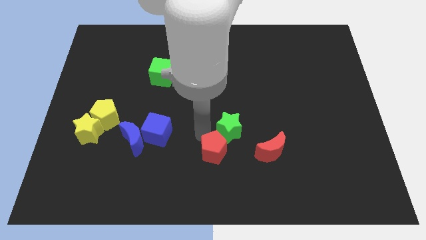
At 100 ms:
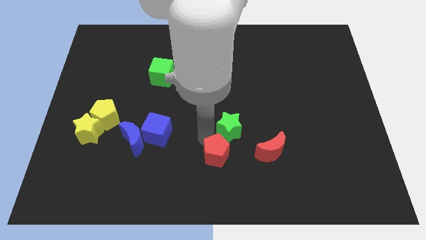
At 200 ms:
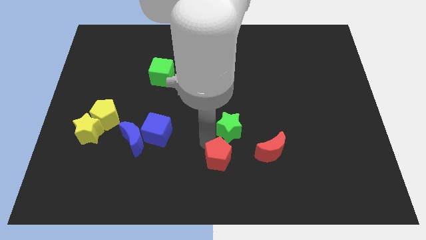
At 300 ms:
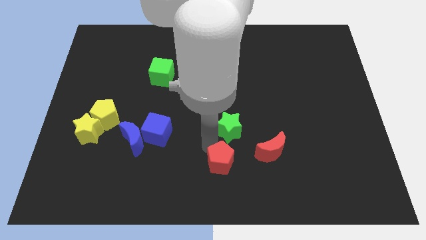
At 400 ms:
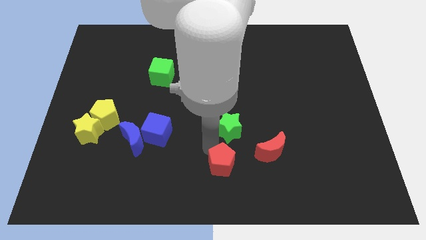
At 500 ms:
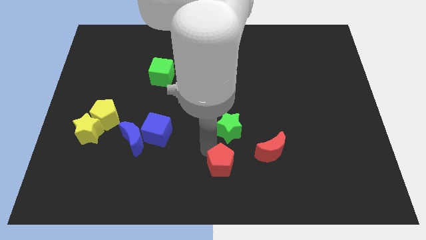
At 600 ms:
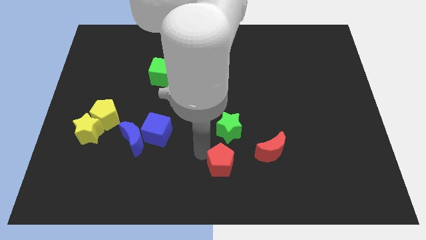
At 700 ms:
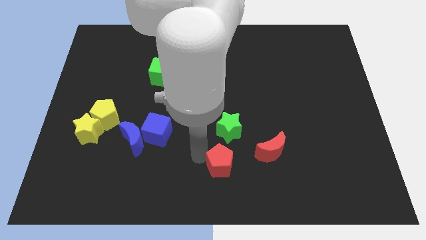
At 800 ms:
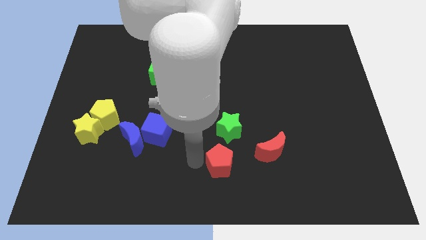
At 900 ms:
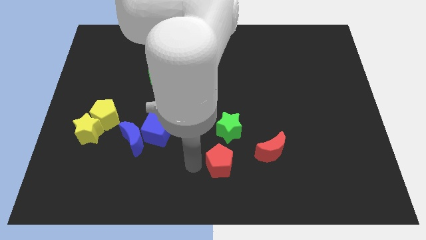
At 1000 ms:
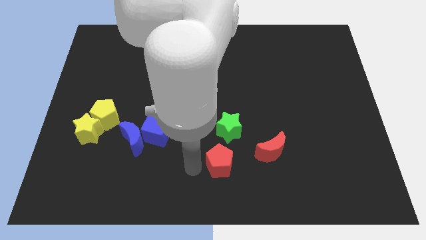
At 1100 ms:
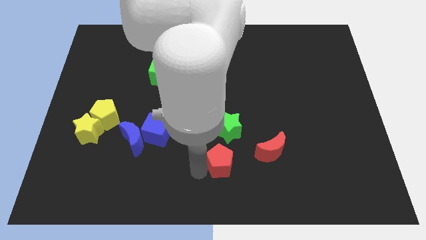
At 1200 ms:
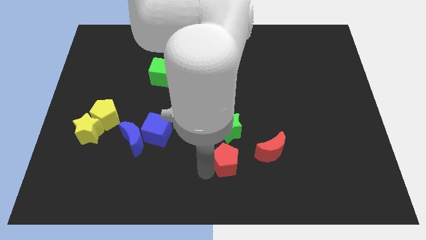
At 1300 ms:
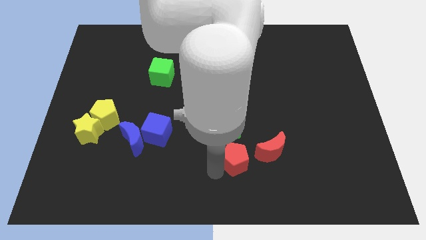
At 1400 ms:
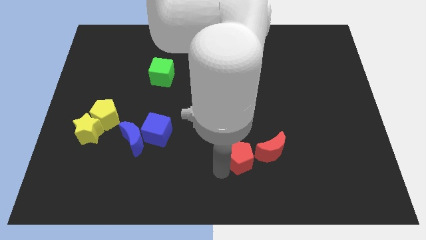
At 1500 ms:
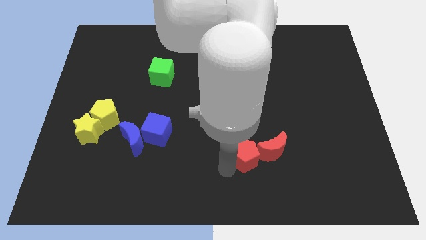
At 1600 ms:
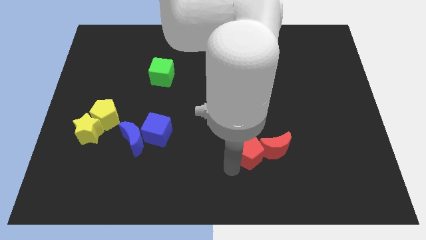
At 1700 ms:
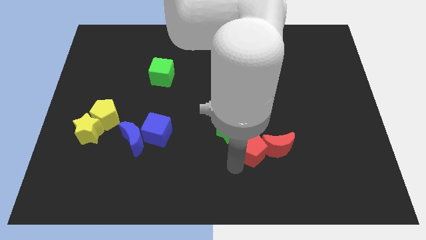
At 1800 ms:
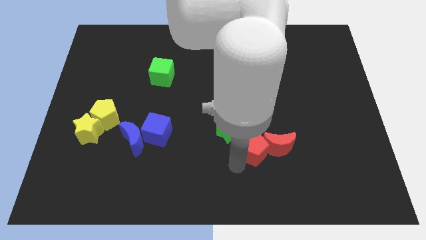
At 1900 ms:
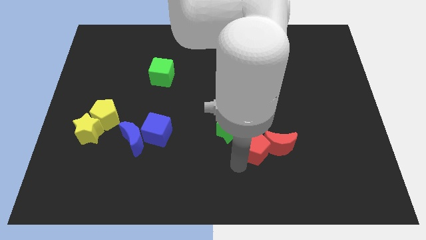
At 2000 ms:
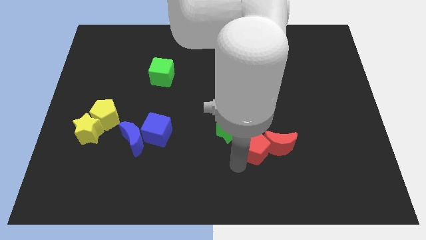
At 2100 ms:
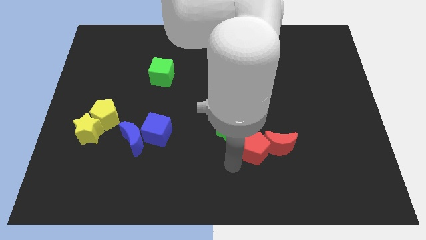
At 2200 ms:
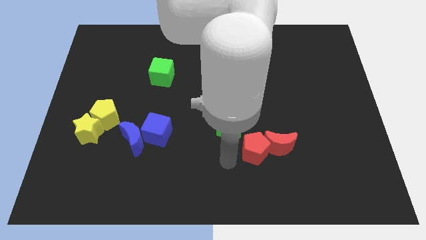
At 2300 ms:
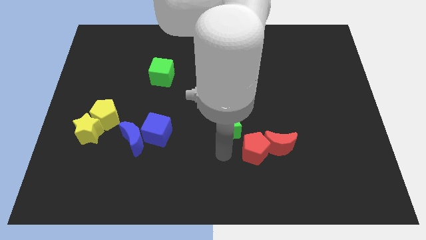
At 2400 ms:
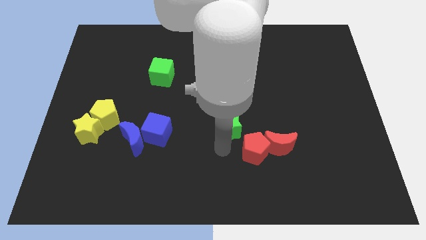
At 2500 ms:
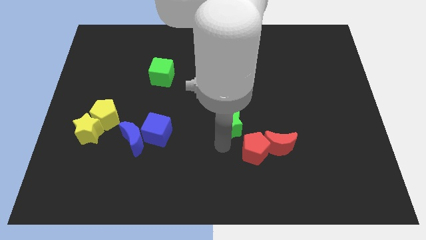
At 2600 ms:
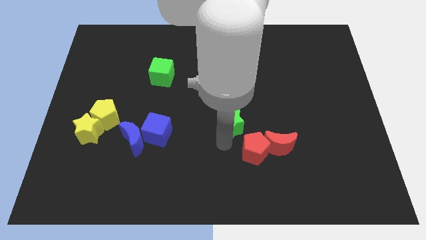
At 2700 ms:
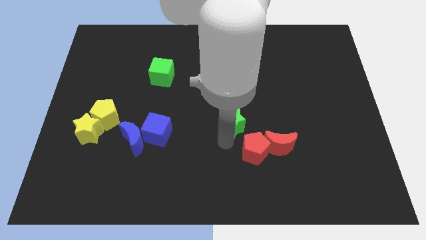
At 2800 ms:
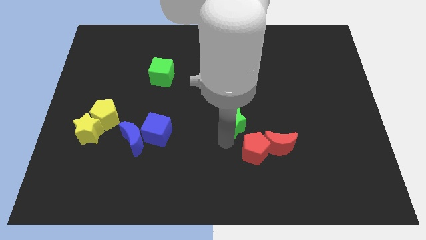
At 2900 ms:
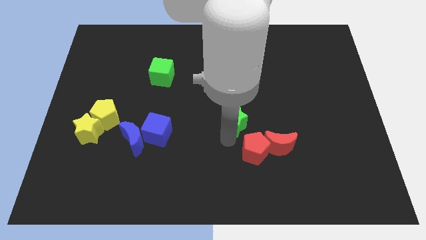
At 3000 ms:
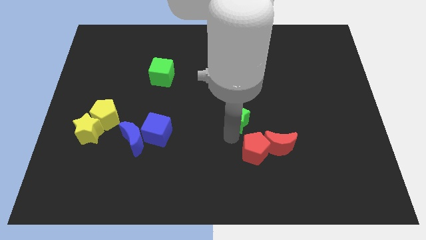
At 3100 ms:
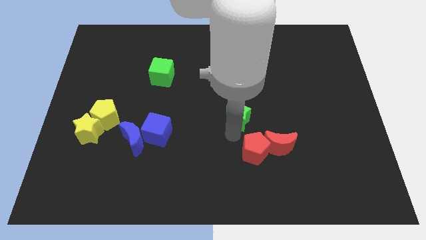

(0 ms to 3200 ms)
move red pentagon close to the red moon

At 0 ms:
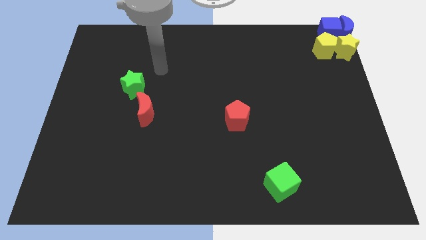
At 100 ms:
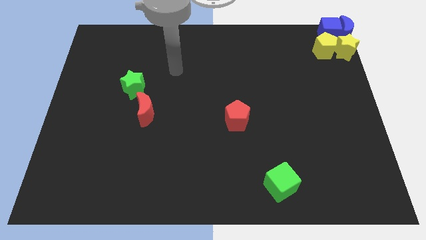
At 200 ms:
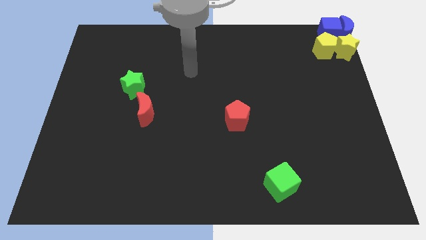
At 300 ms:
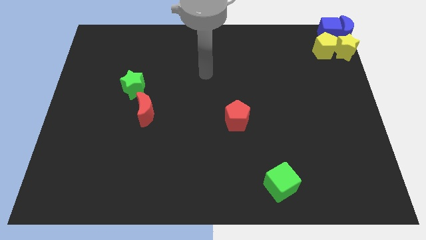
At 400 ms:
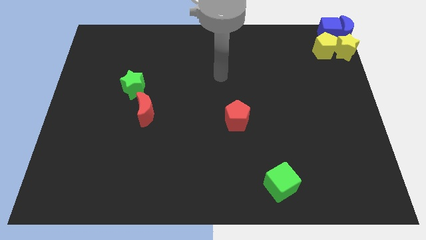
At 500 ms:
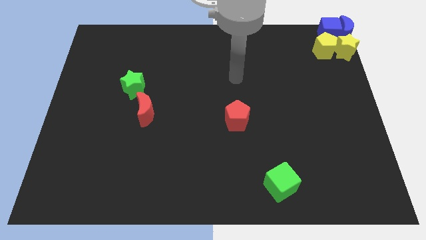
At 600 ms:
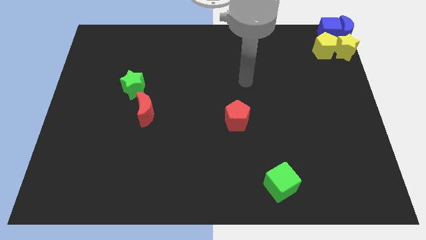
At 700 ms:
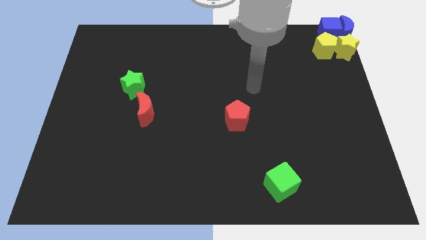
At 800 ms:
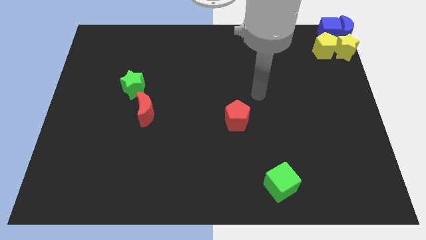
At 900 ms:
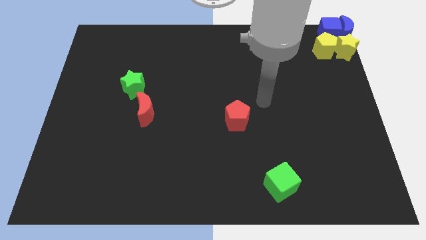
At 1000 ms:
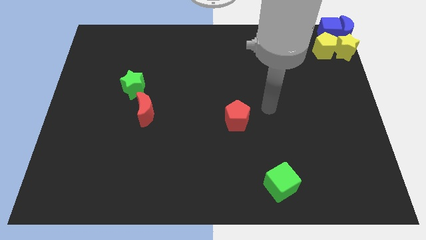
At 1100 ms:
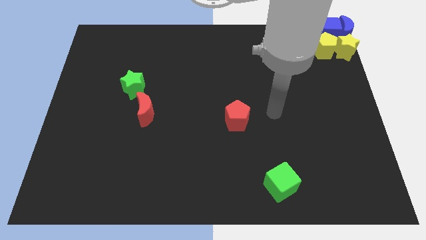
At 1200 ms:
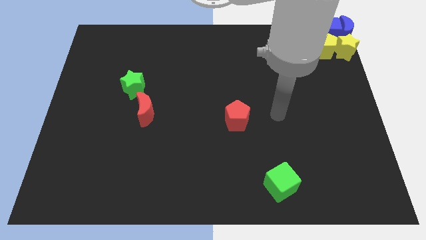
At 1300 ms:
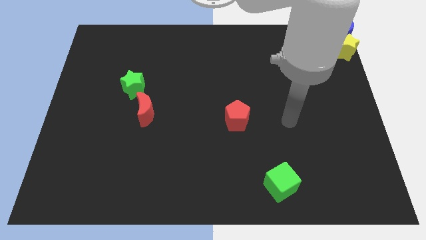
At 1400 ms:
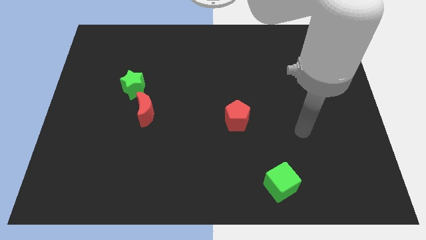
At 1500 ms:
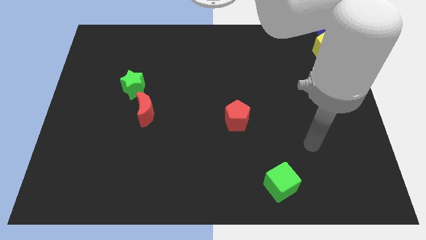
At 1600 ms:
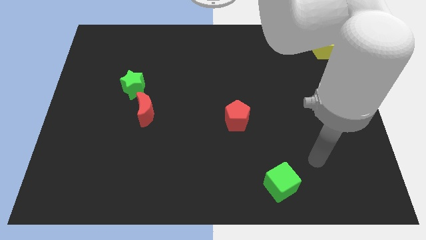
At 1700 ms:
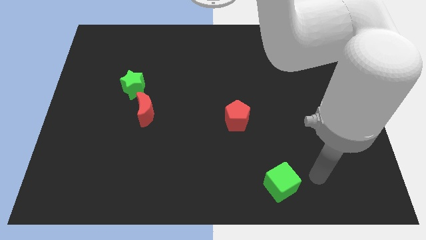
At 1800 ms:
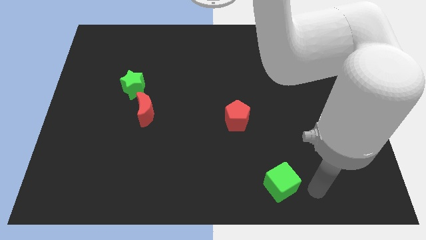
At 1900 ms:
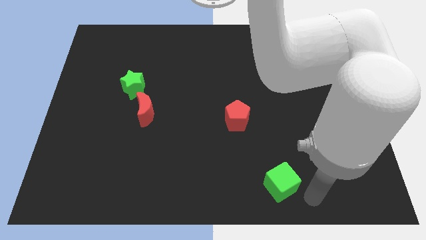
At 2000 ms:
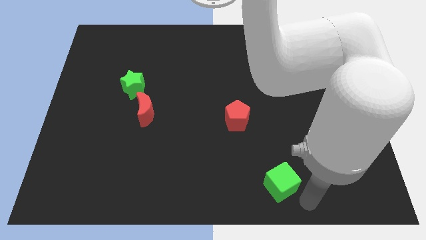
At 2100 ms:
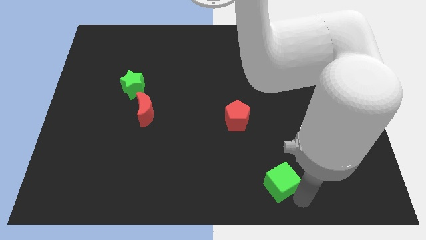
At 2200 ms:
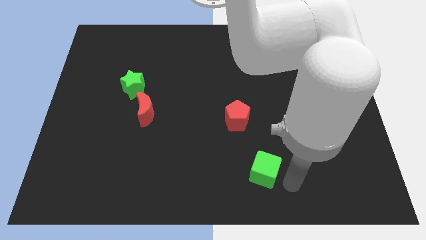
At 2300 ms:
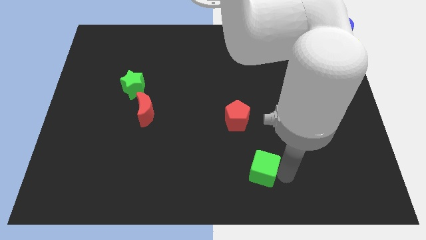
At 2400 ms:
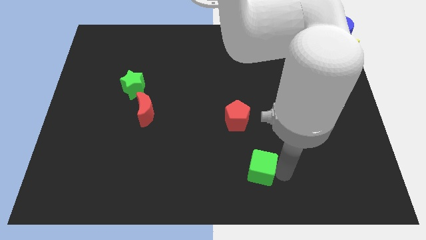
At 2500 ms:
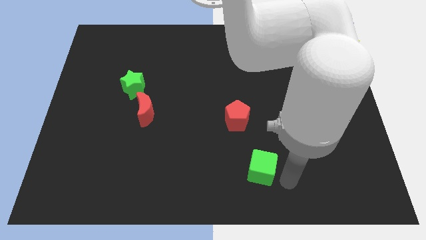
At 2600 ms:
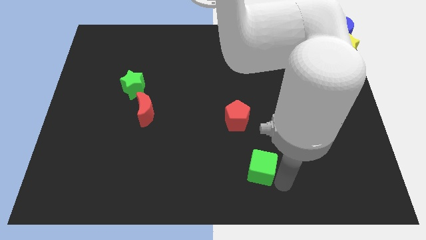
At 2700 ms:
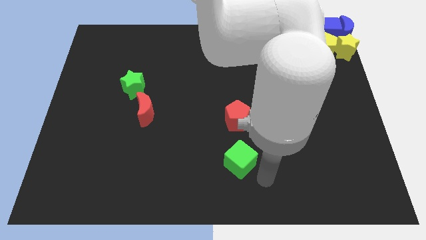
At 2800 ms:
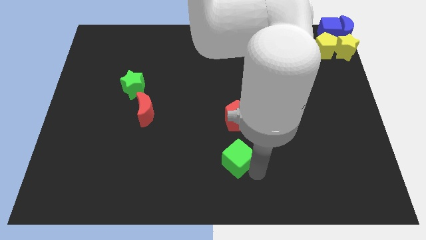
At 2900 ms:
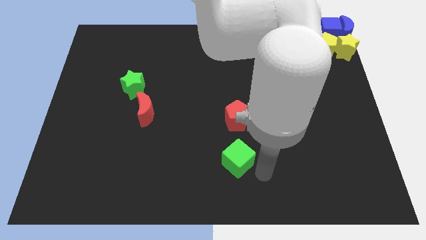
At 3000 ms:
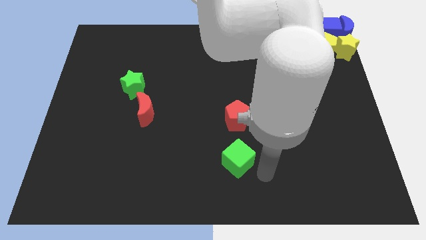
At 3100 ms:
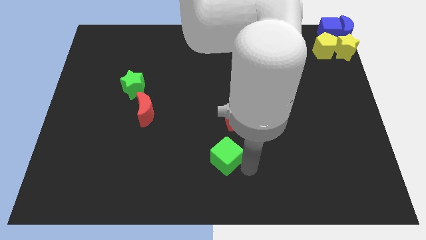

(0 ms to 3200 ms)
place the green cube below the red pentagon

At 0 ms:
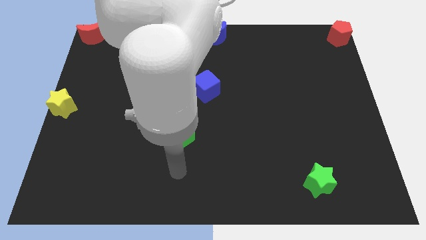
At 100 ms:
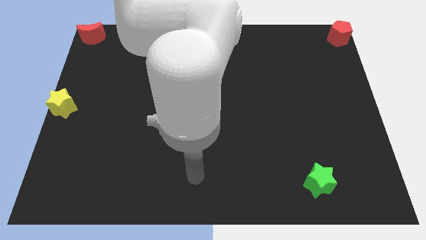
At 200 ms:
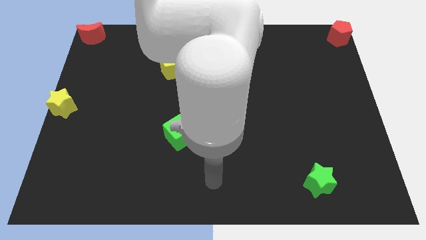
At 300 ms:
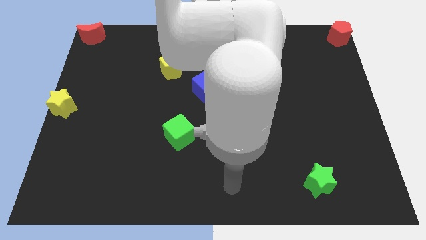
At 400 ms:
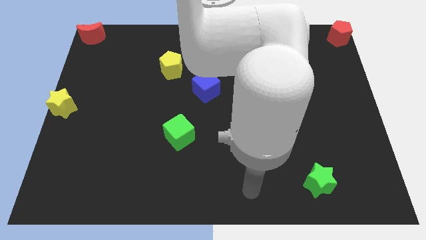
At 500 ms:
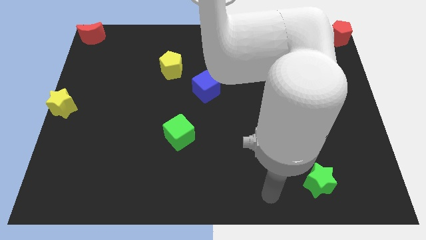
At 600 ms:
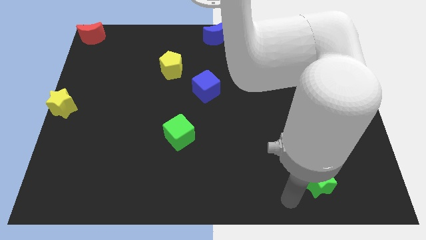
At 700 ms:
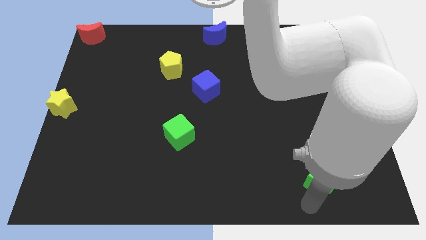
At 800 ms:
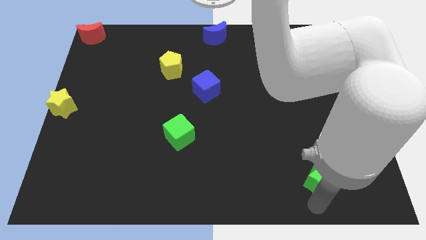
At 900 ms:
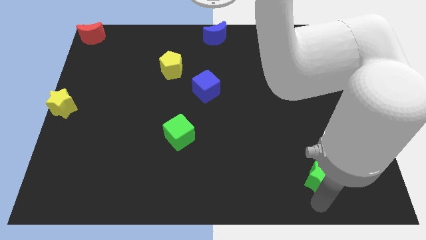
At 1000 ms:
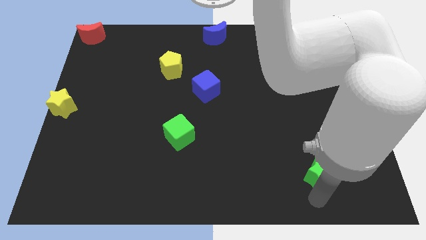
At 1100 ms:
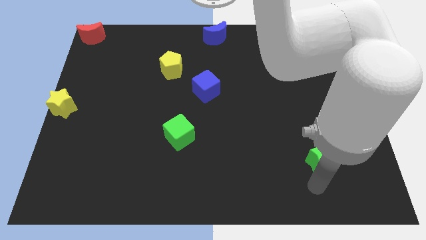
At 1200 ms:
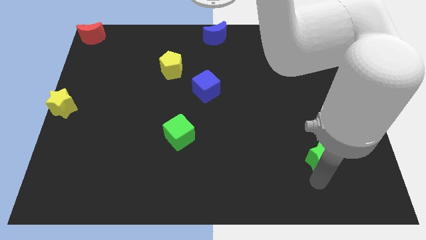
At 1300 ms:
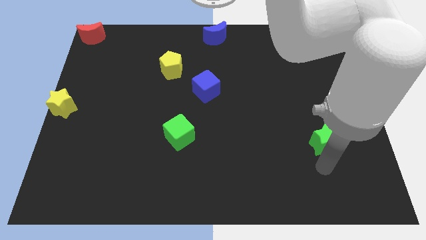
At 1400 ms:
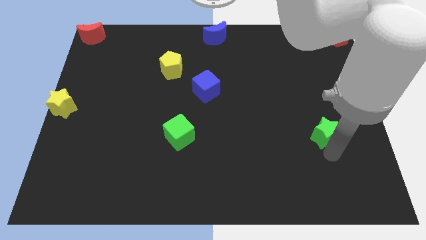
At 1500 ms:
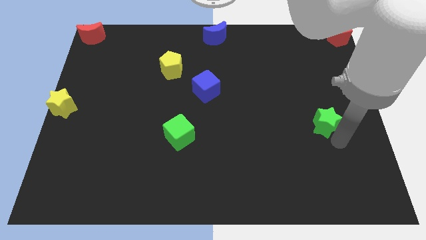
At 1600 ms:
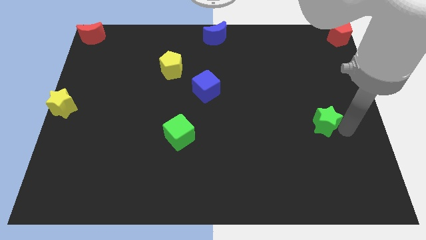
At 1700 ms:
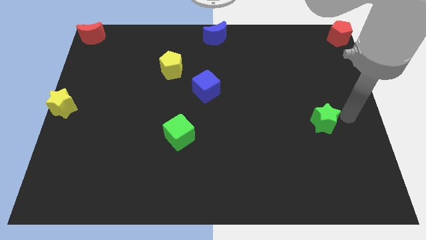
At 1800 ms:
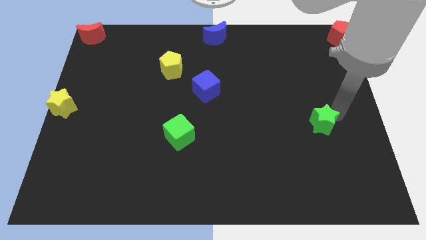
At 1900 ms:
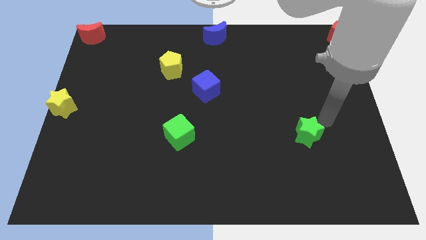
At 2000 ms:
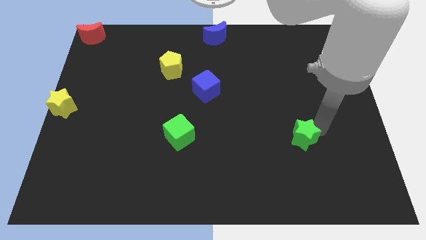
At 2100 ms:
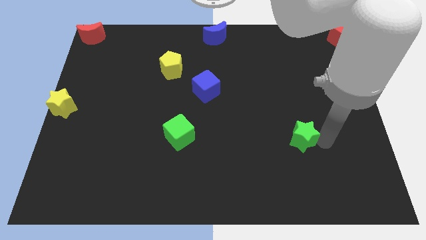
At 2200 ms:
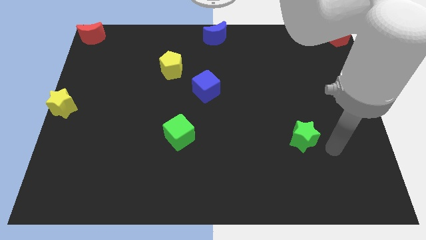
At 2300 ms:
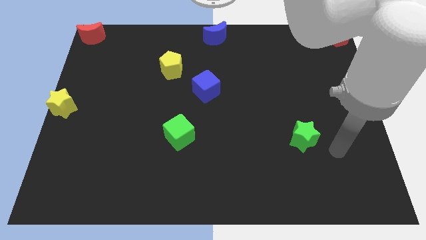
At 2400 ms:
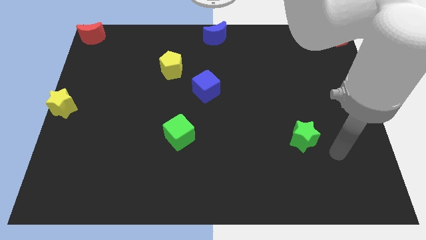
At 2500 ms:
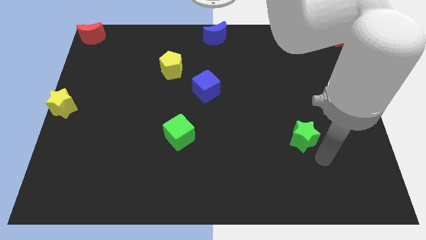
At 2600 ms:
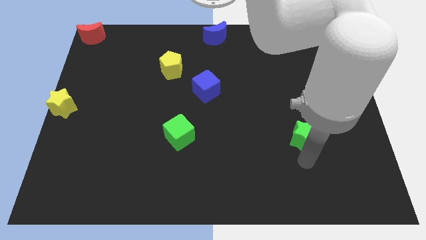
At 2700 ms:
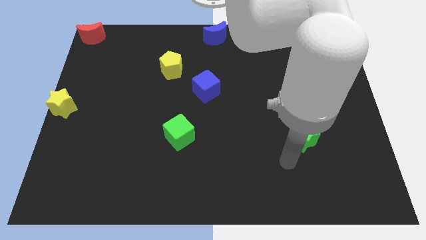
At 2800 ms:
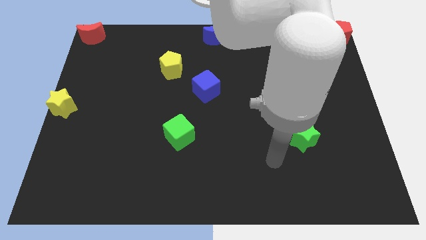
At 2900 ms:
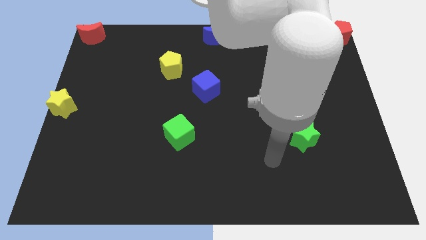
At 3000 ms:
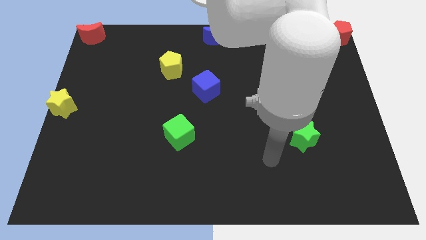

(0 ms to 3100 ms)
push the green star horizontally to the right side of the green cube
